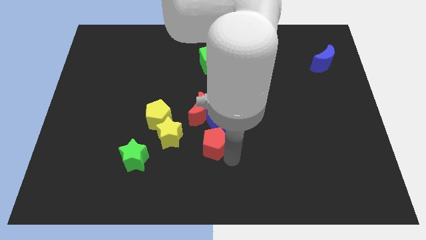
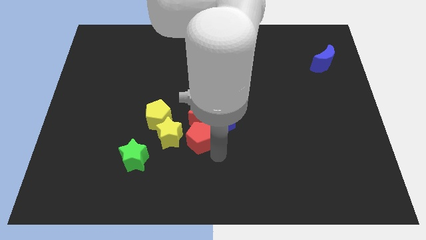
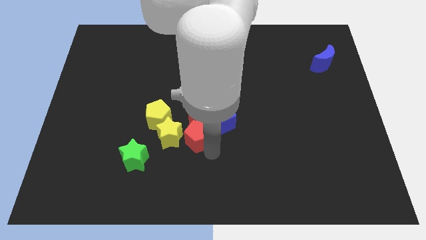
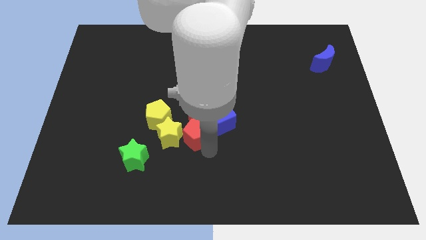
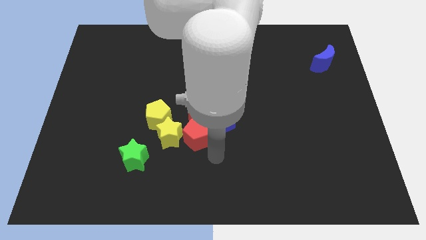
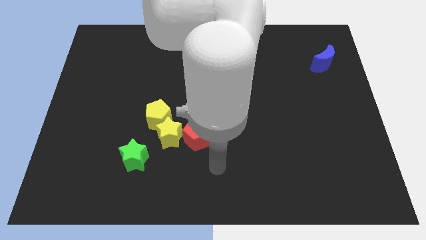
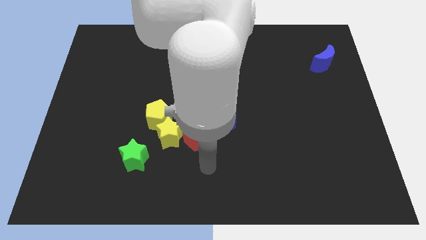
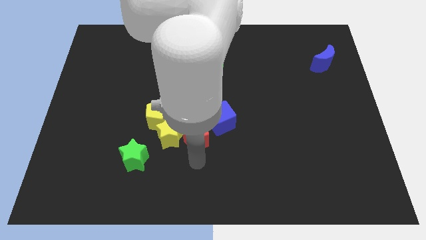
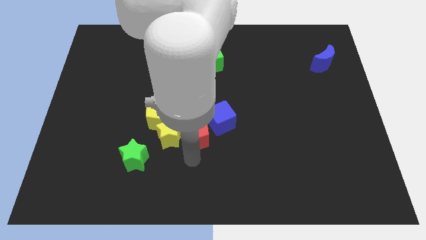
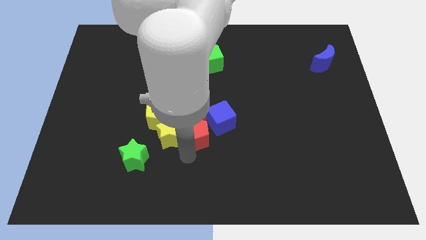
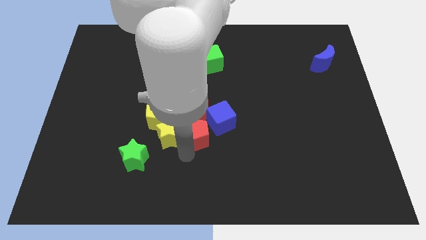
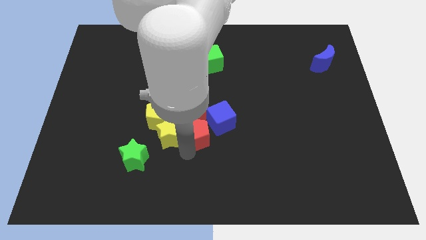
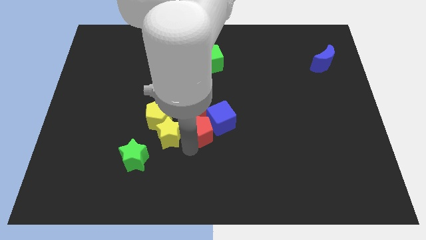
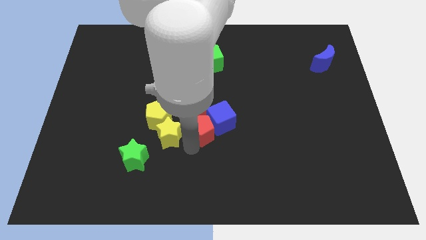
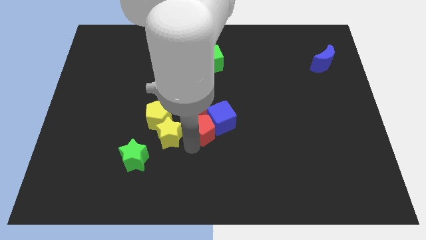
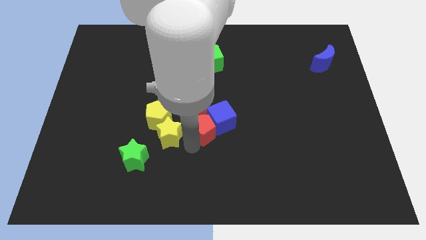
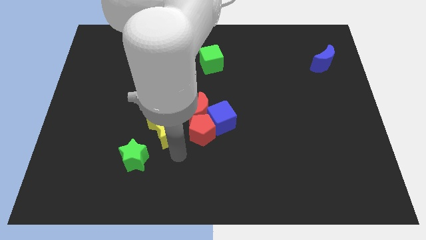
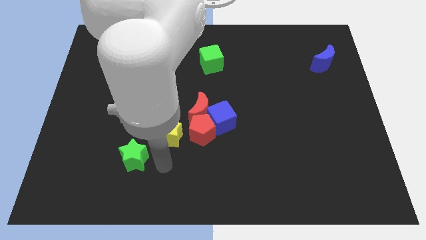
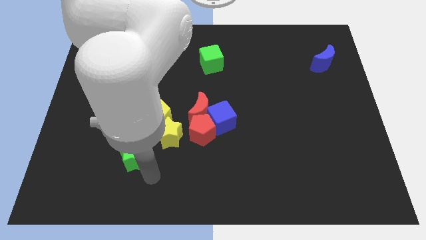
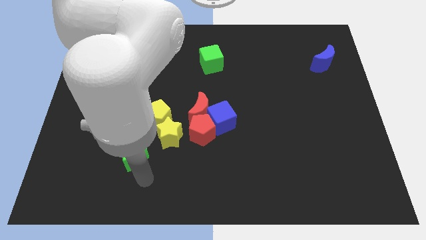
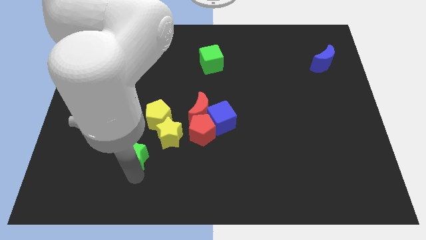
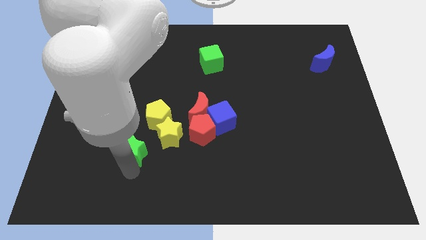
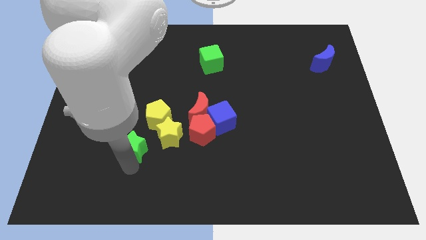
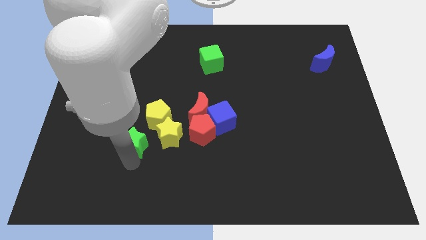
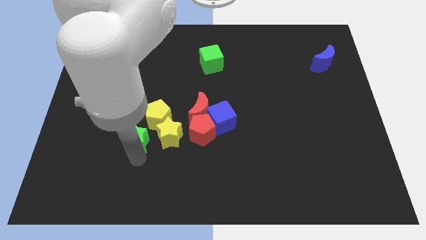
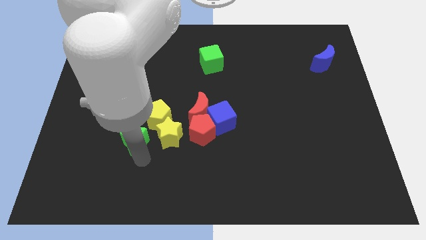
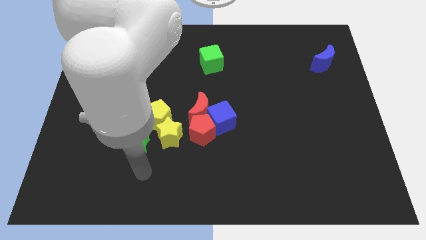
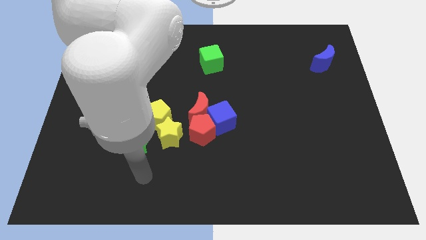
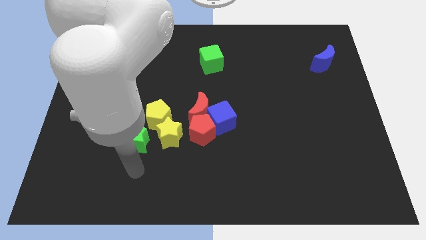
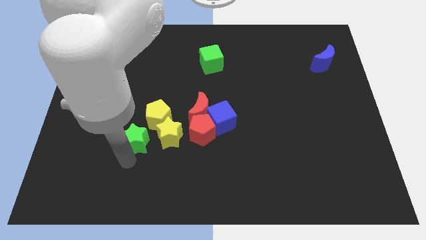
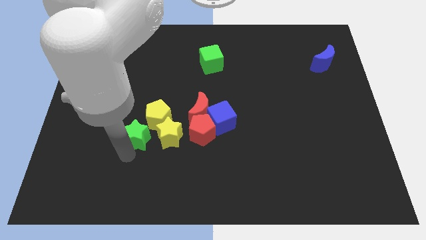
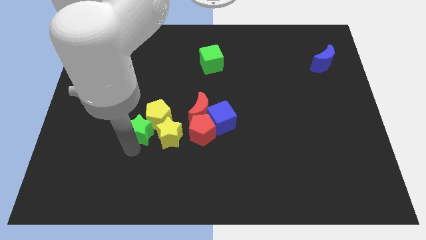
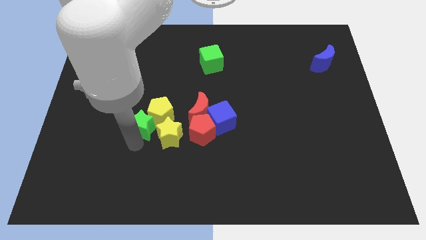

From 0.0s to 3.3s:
push green star into yellow pentagon

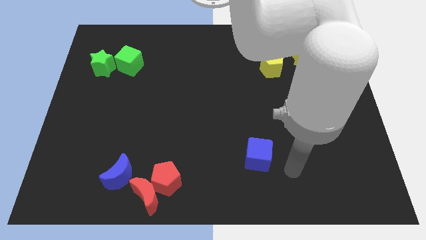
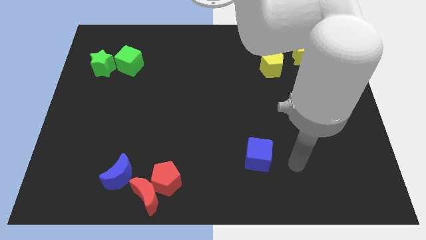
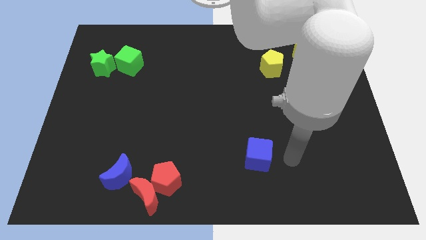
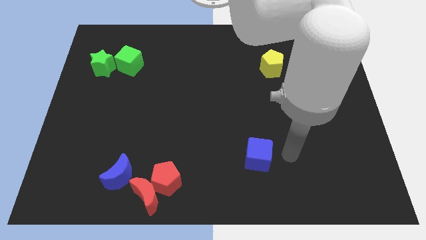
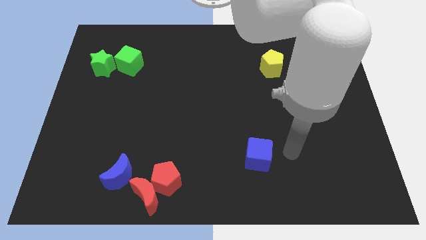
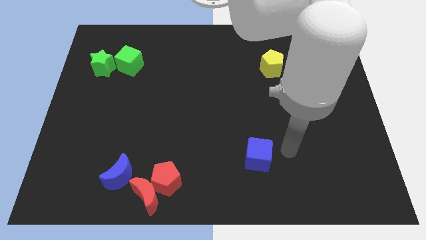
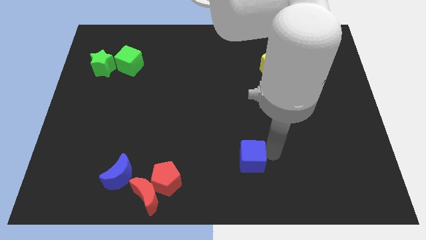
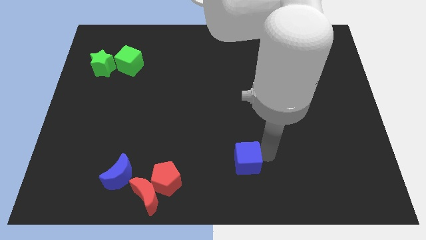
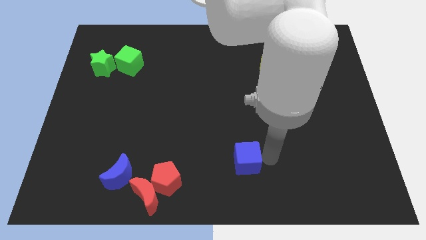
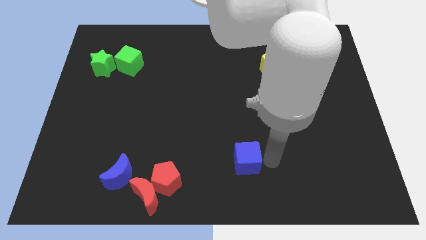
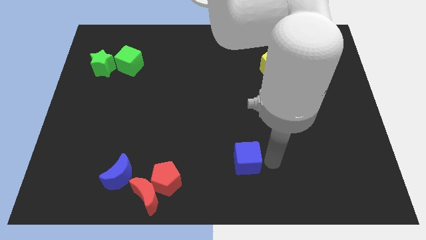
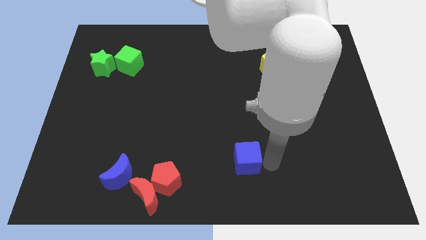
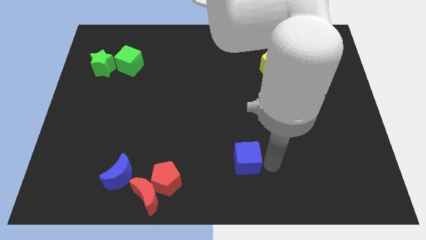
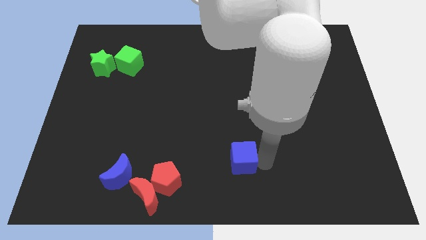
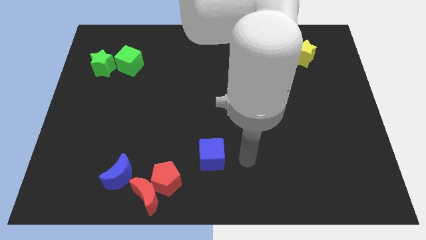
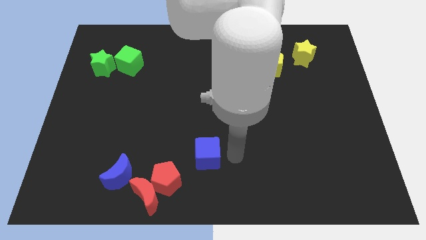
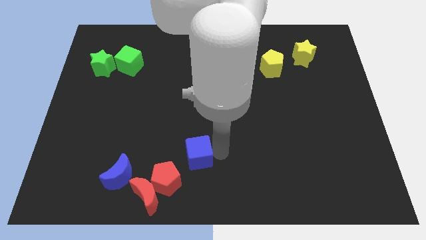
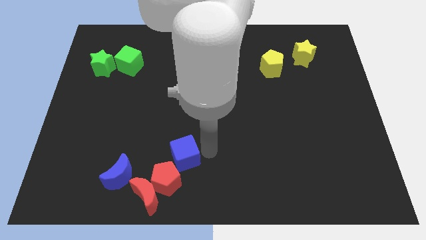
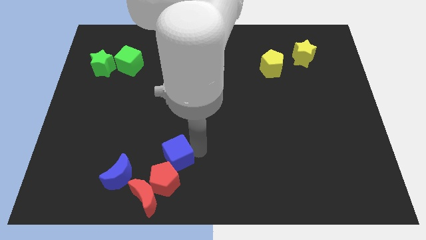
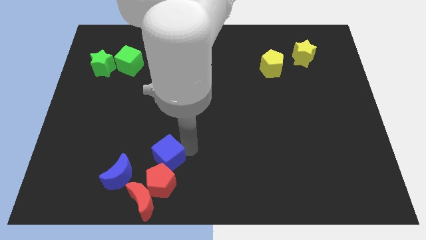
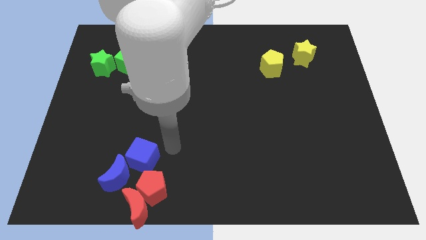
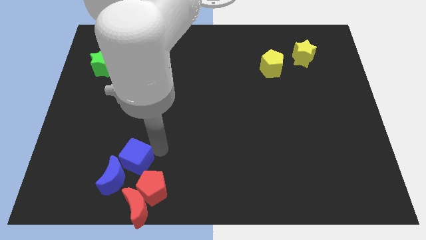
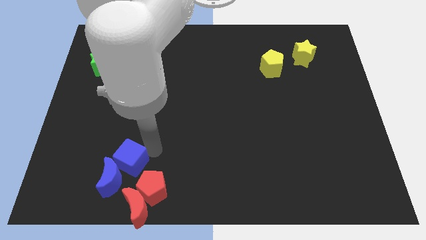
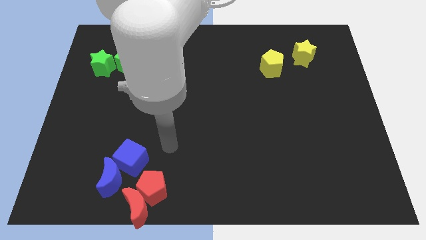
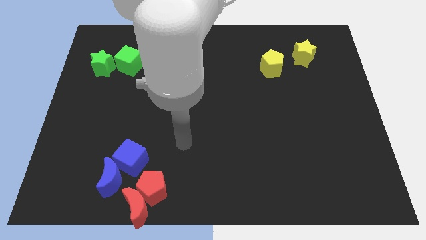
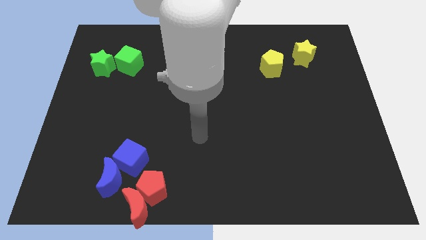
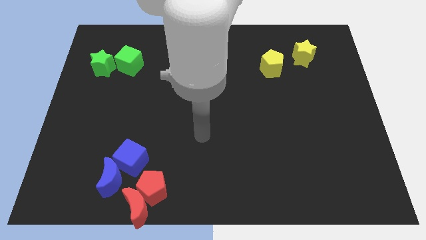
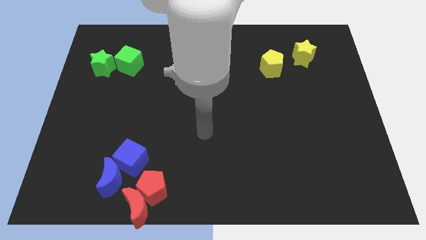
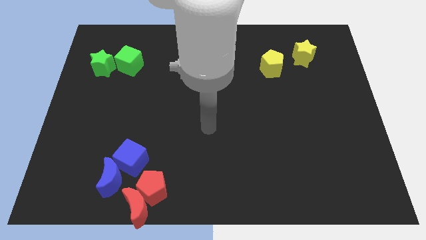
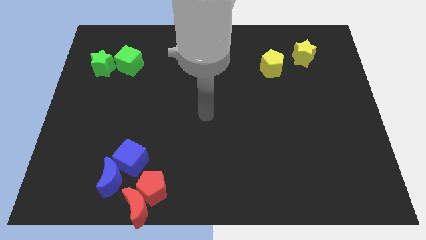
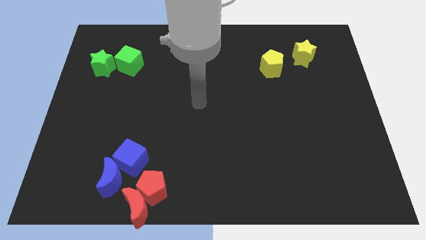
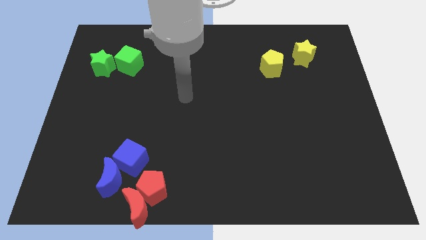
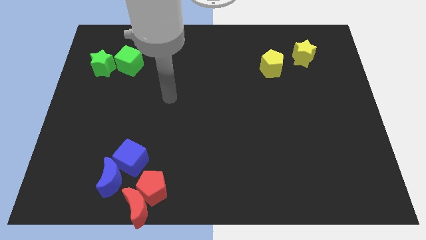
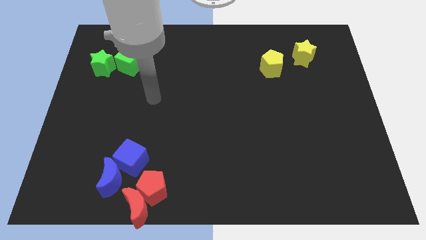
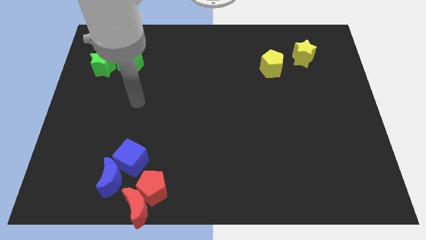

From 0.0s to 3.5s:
move the blue cube into the blue moon

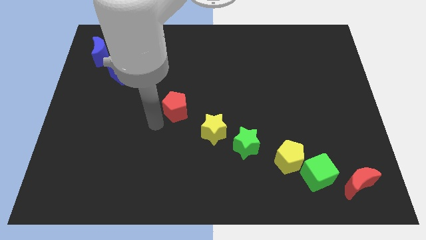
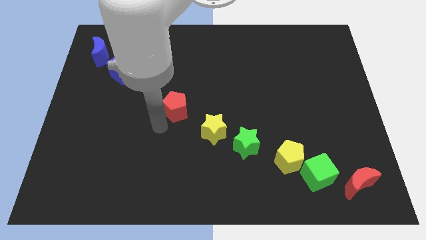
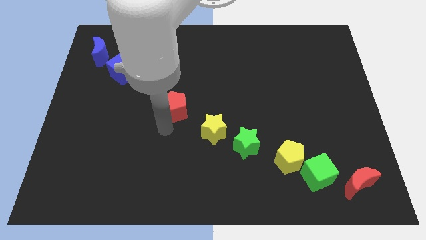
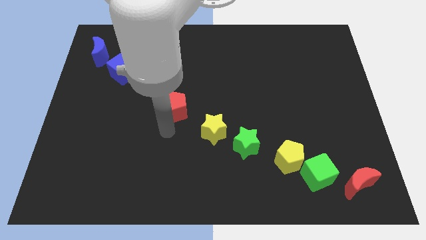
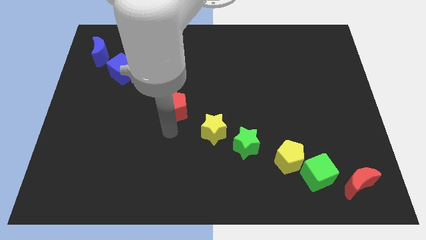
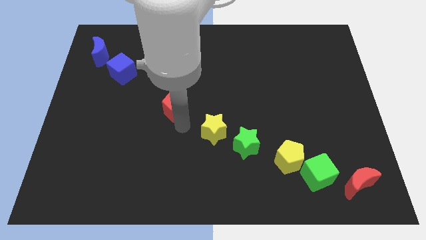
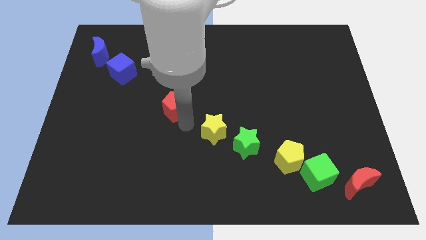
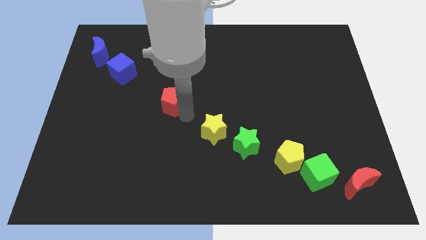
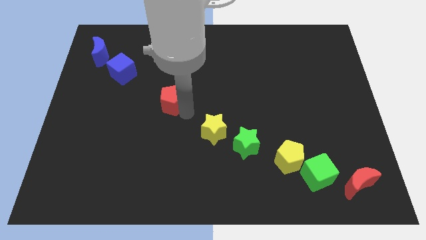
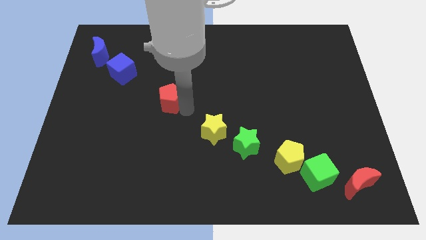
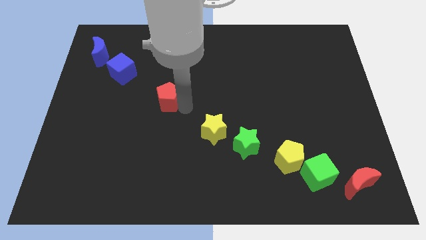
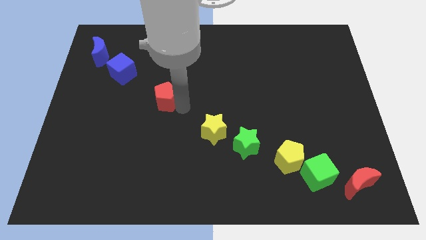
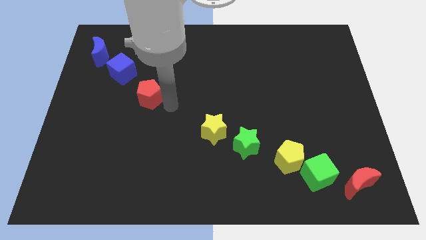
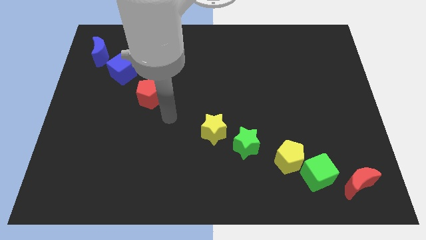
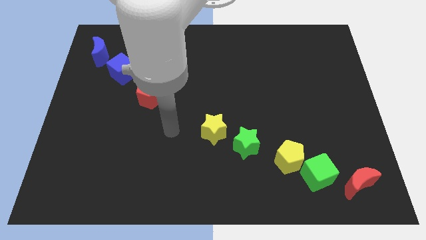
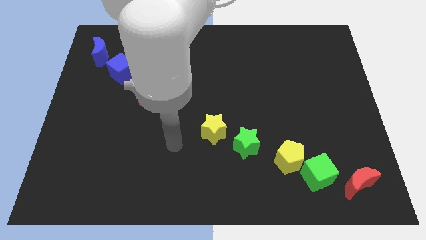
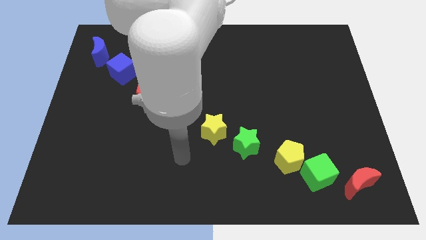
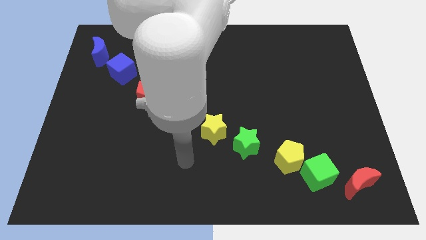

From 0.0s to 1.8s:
push the red pentagon slightly towards the blue cube

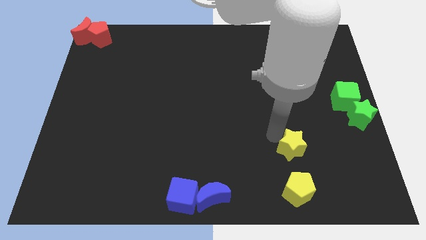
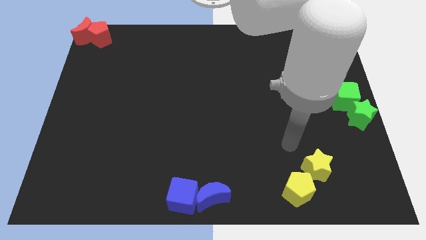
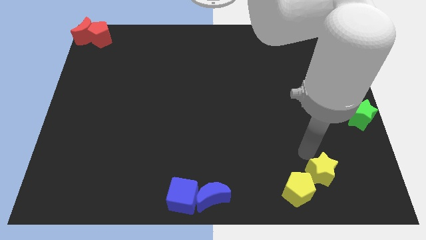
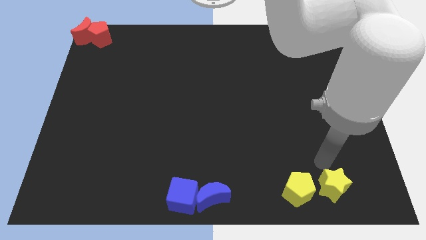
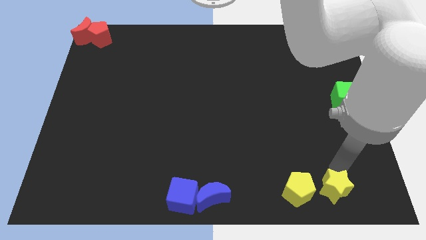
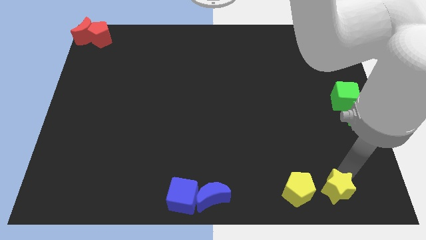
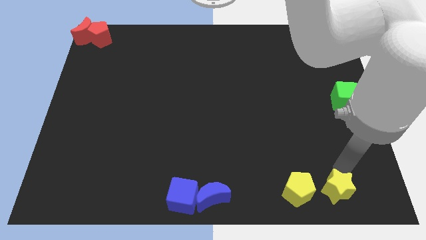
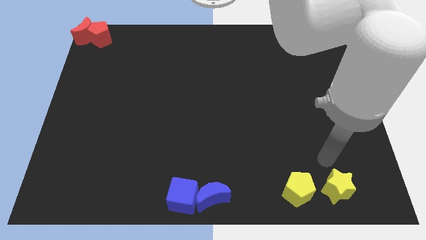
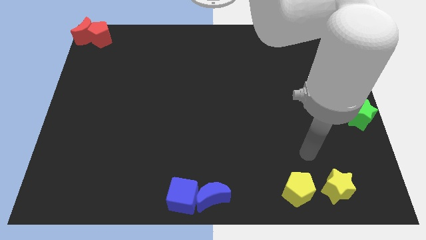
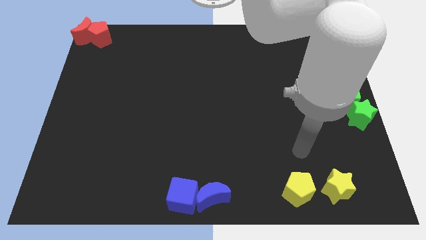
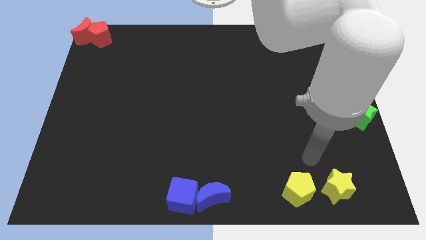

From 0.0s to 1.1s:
push the yellow star right to the yellow pentagon
